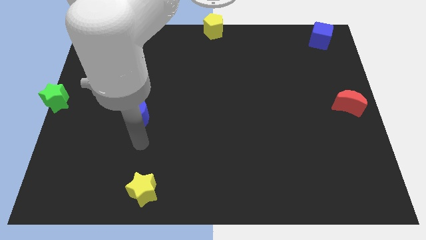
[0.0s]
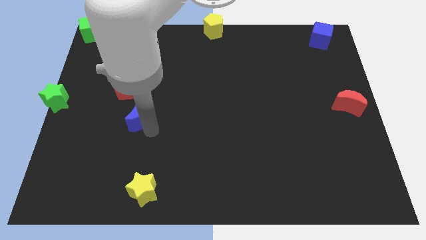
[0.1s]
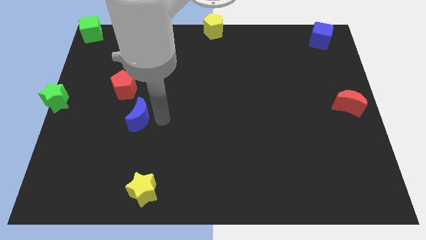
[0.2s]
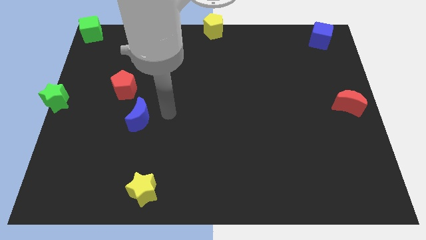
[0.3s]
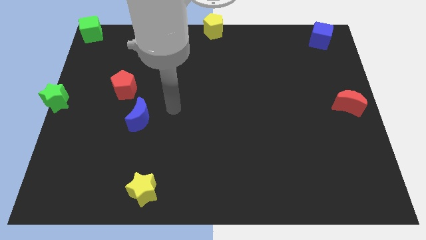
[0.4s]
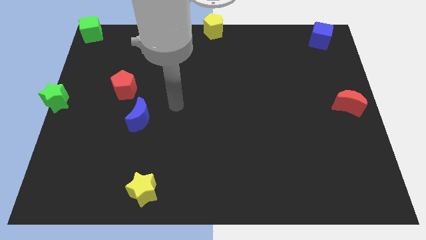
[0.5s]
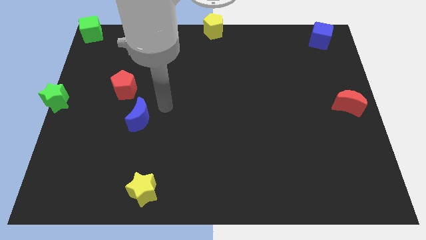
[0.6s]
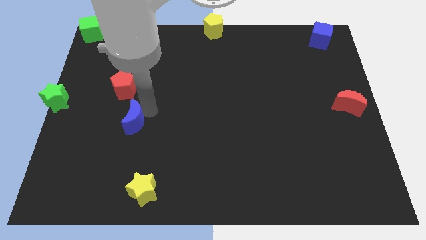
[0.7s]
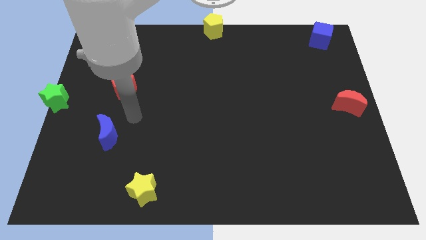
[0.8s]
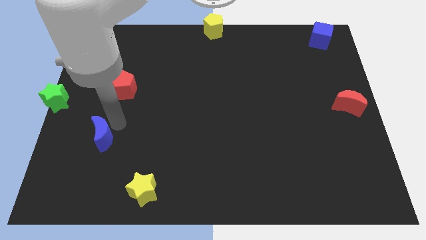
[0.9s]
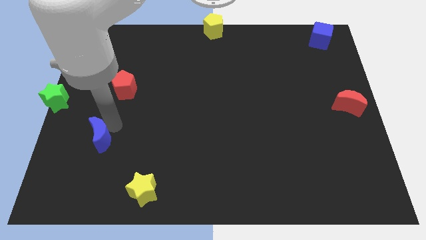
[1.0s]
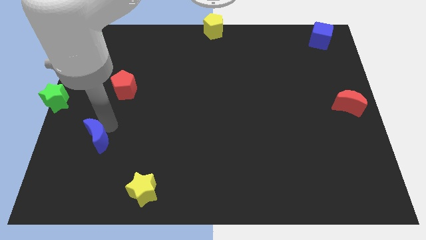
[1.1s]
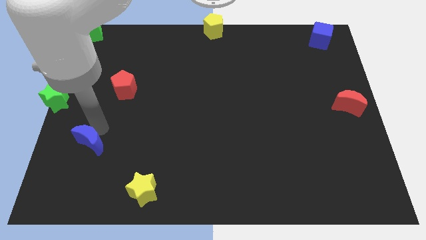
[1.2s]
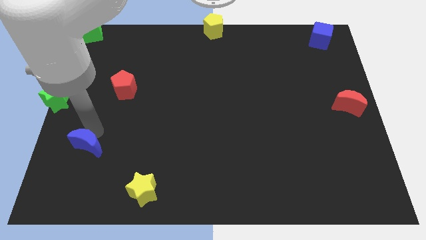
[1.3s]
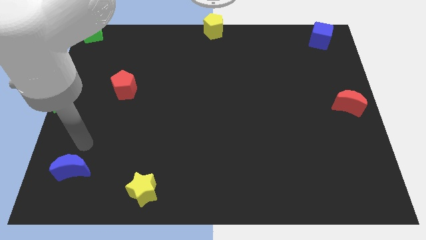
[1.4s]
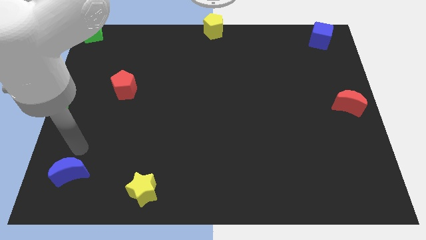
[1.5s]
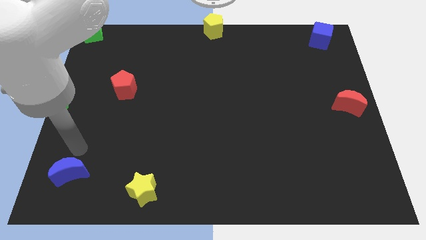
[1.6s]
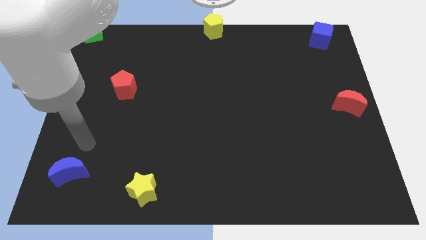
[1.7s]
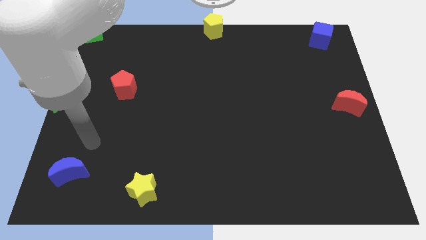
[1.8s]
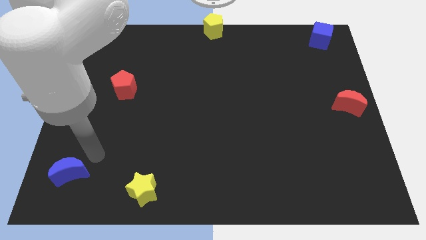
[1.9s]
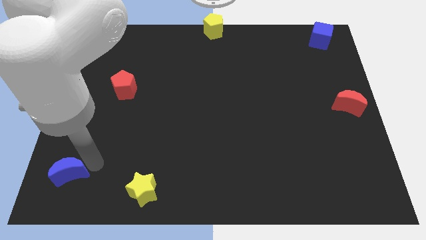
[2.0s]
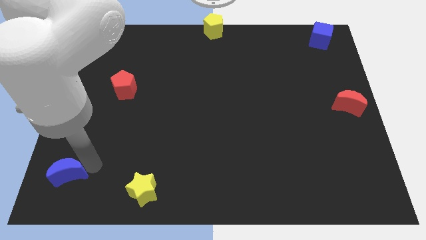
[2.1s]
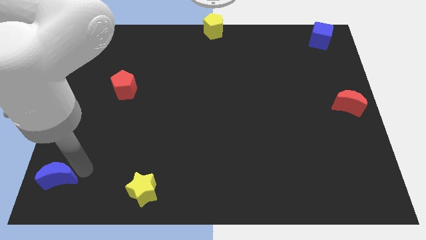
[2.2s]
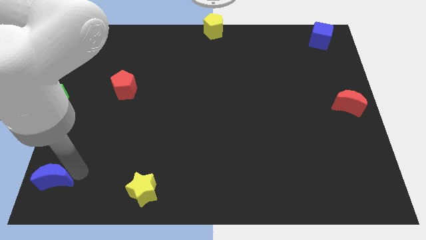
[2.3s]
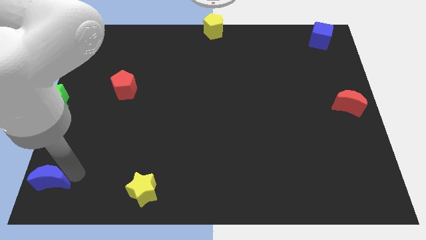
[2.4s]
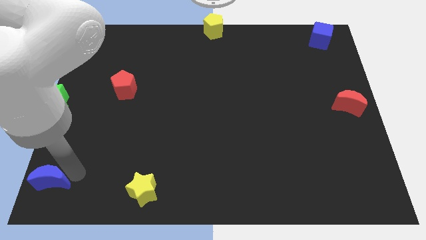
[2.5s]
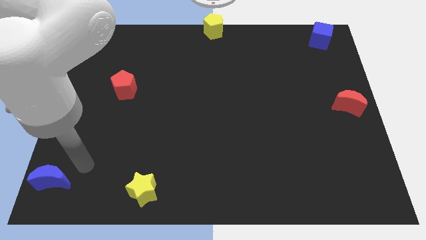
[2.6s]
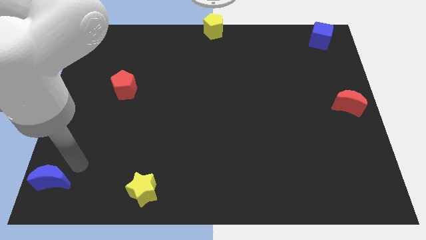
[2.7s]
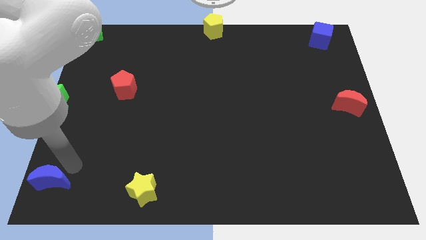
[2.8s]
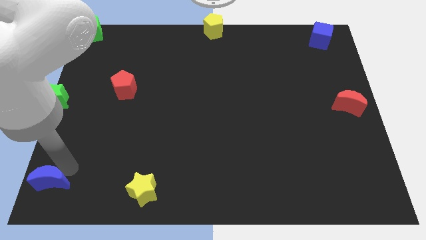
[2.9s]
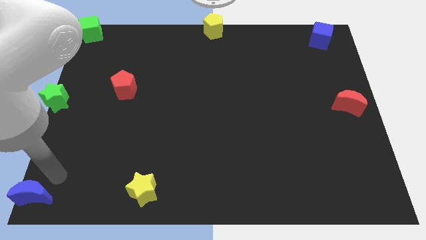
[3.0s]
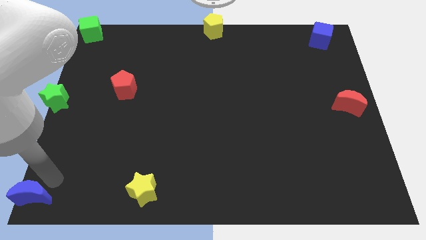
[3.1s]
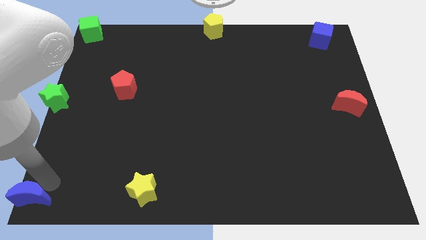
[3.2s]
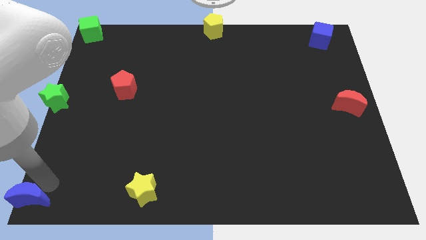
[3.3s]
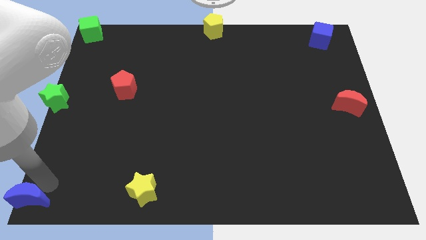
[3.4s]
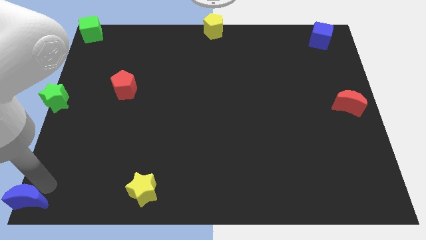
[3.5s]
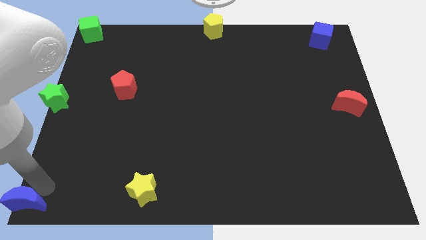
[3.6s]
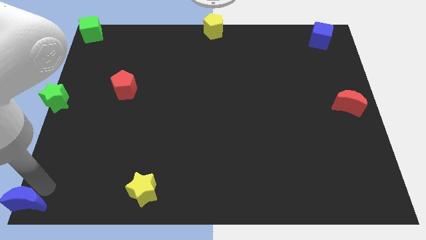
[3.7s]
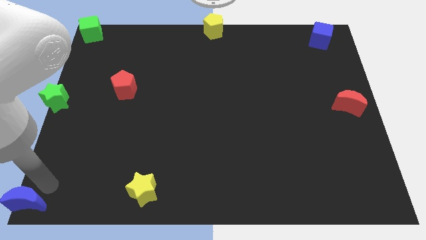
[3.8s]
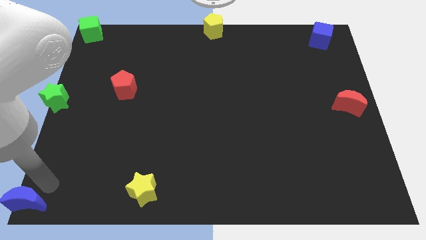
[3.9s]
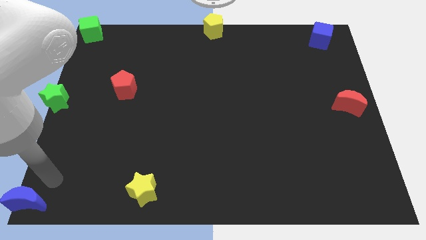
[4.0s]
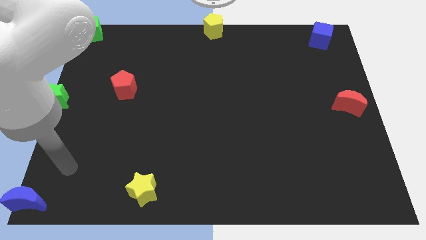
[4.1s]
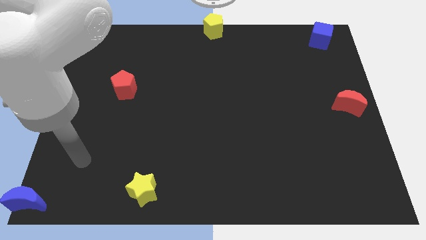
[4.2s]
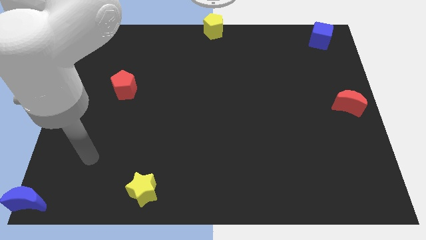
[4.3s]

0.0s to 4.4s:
push the blue moon to the bottom left corner

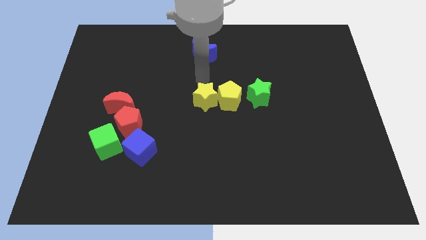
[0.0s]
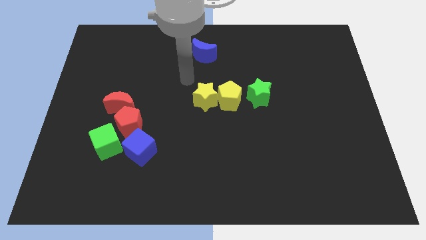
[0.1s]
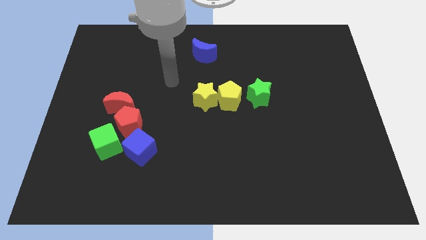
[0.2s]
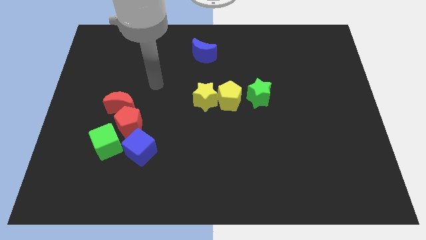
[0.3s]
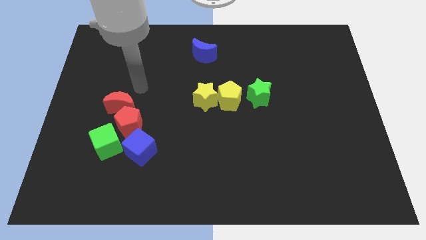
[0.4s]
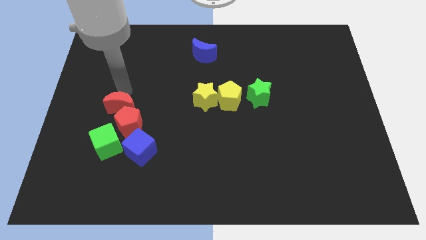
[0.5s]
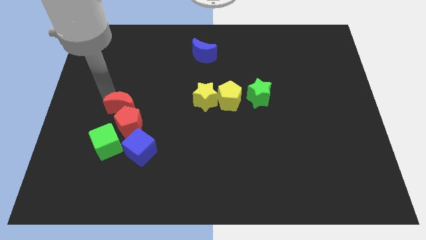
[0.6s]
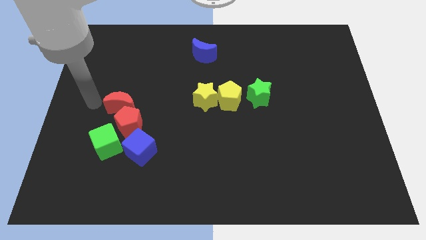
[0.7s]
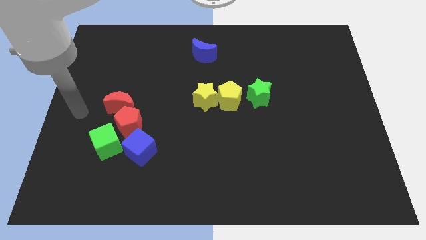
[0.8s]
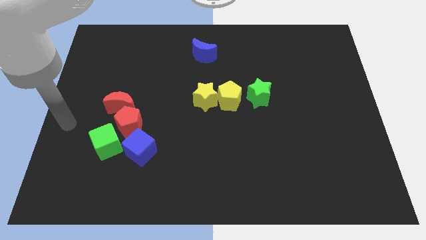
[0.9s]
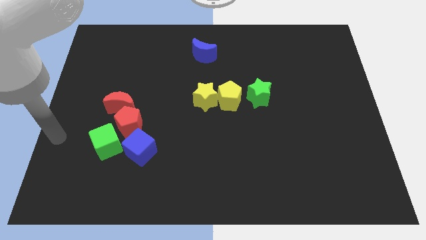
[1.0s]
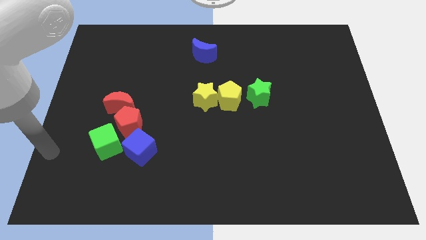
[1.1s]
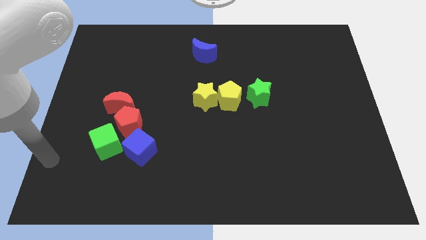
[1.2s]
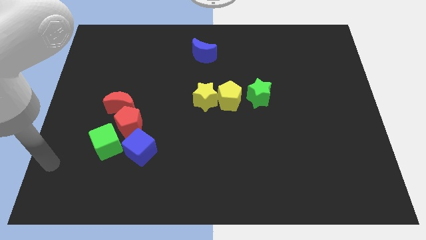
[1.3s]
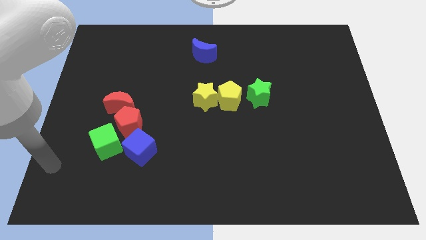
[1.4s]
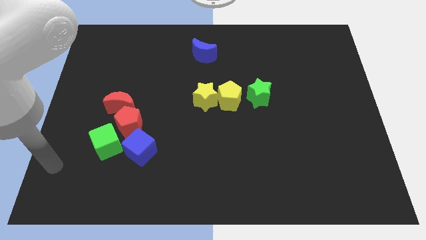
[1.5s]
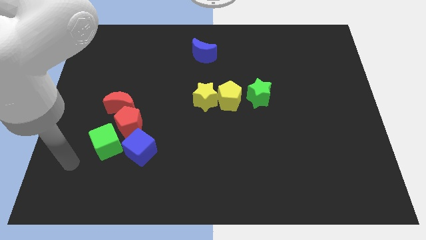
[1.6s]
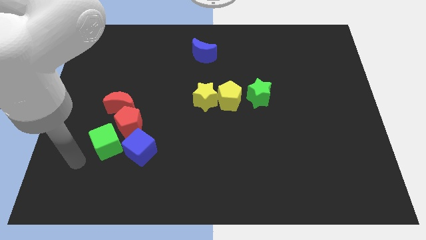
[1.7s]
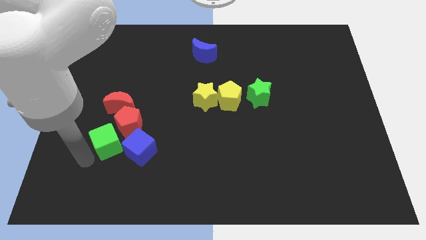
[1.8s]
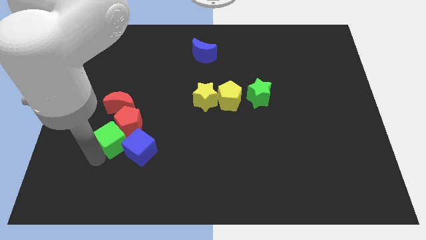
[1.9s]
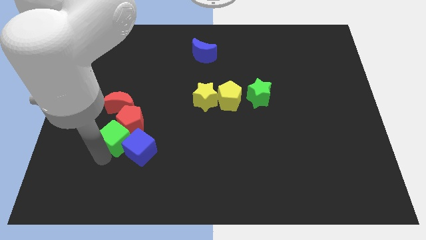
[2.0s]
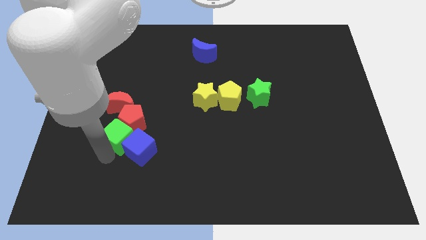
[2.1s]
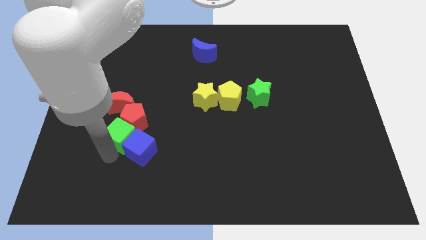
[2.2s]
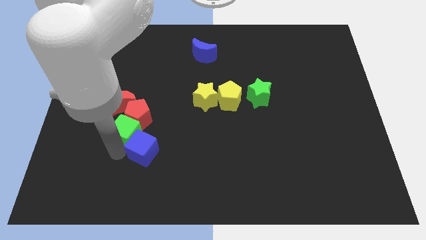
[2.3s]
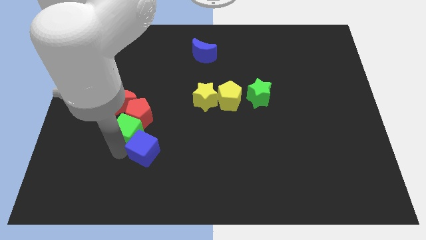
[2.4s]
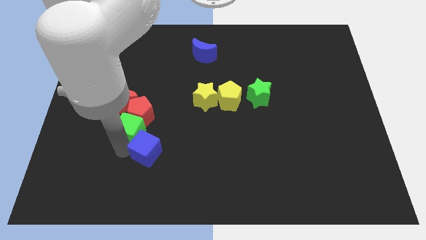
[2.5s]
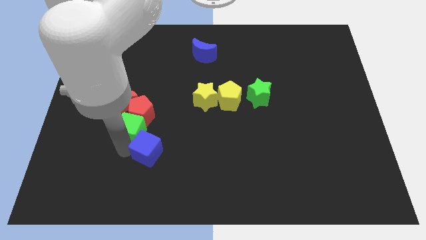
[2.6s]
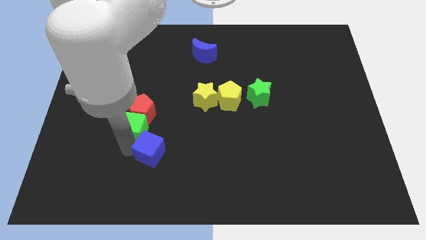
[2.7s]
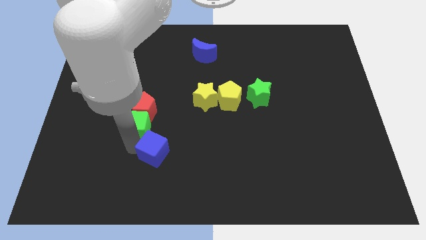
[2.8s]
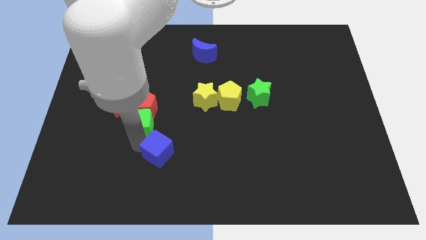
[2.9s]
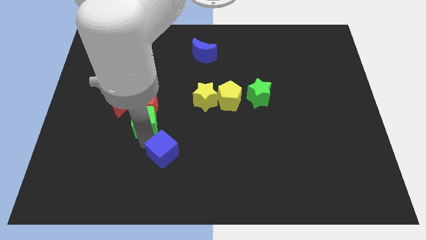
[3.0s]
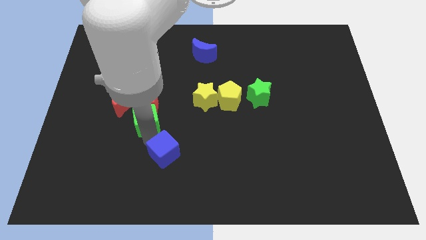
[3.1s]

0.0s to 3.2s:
push the green cube vertically below the red pentagon

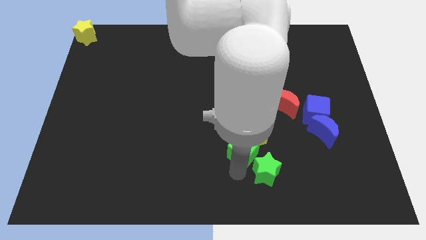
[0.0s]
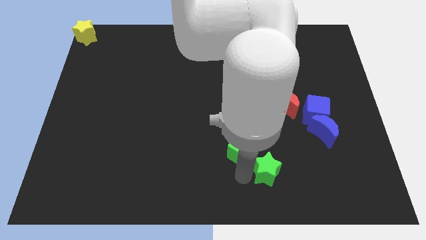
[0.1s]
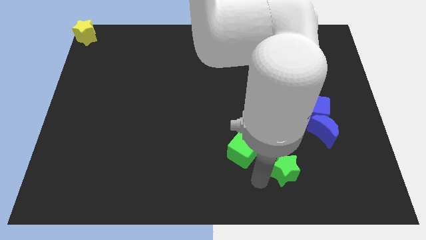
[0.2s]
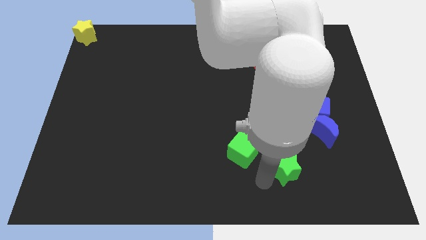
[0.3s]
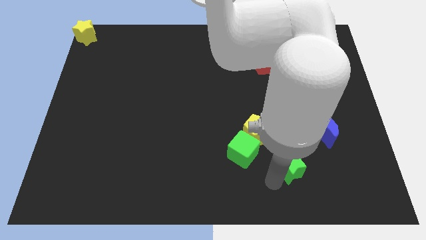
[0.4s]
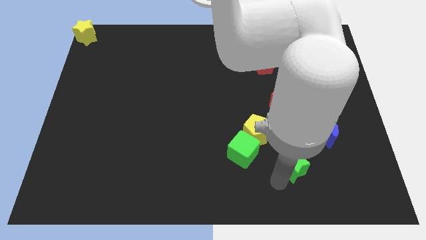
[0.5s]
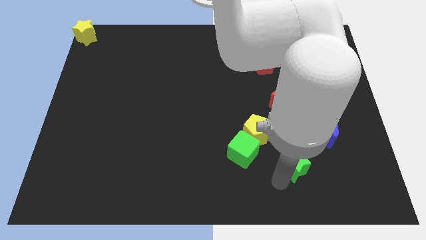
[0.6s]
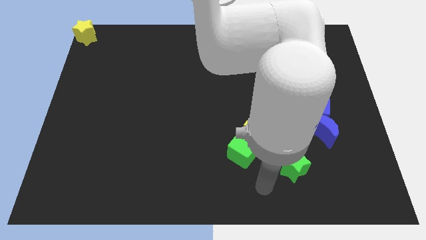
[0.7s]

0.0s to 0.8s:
move the green star away from the green cube

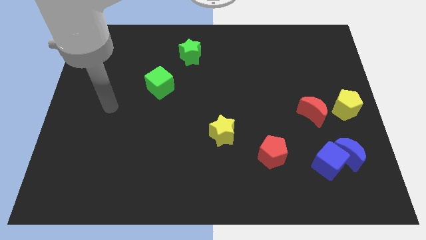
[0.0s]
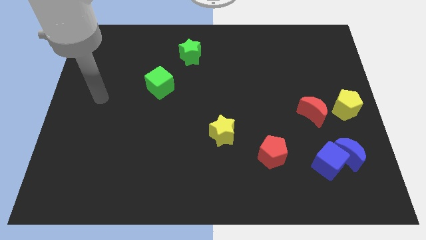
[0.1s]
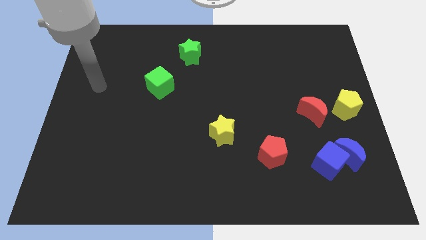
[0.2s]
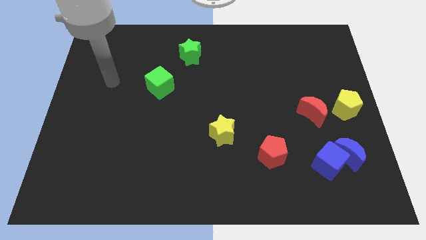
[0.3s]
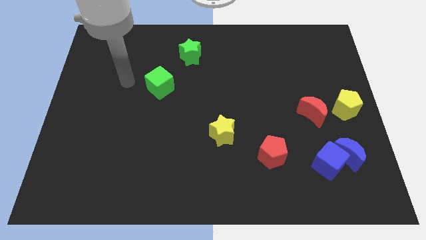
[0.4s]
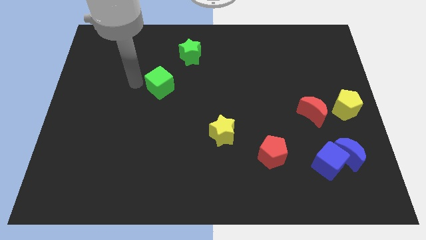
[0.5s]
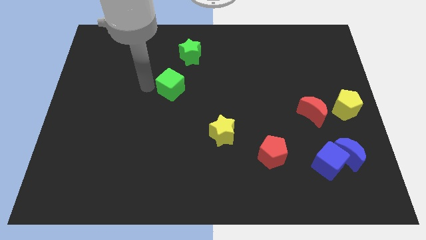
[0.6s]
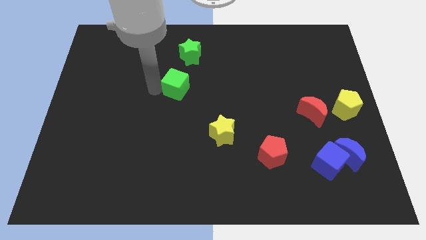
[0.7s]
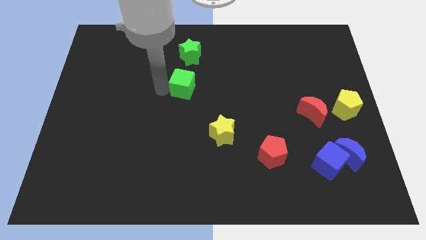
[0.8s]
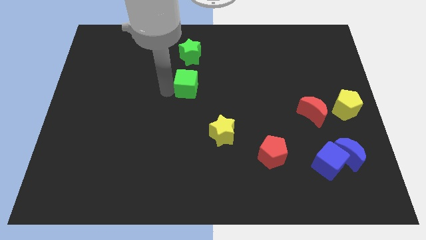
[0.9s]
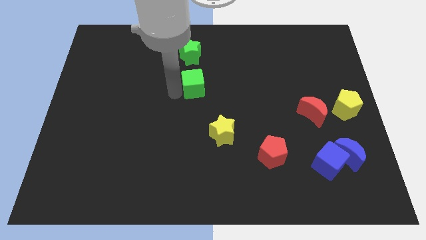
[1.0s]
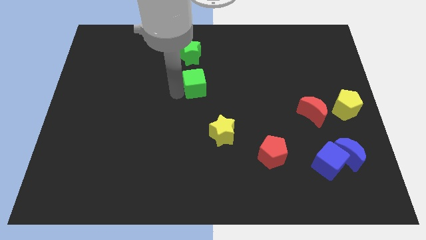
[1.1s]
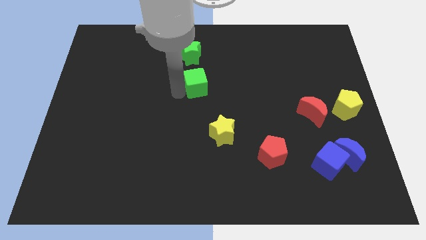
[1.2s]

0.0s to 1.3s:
place the green cube below the green star
